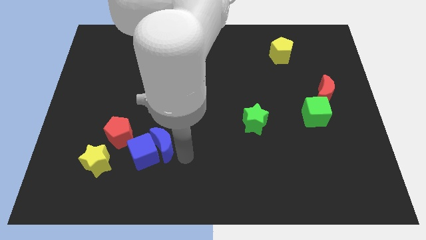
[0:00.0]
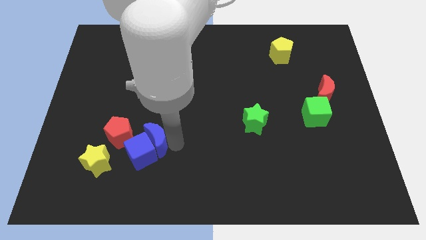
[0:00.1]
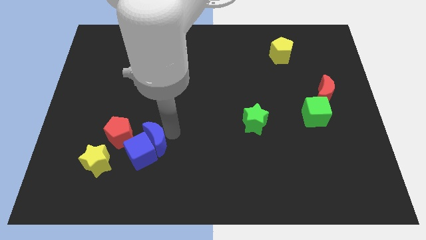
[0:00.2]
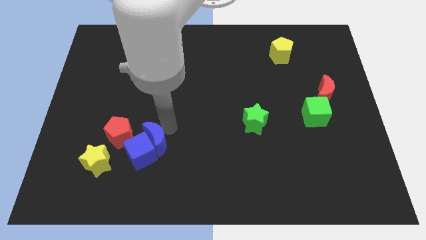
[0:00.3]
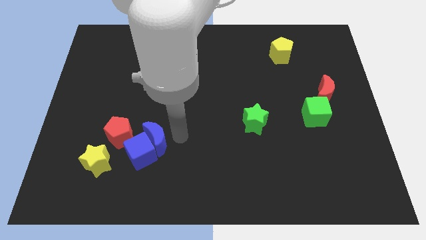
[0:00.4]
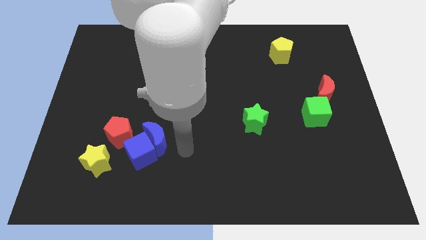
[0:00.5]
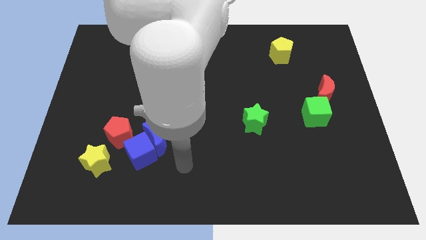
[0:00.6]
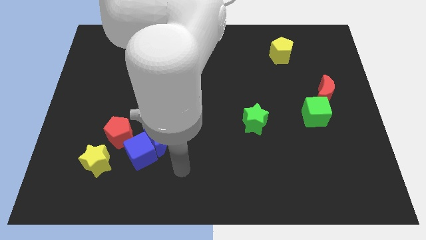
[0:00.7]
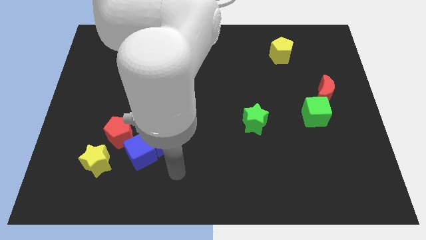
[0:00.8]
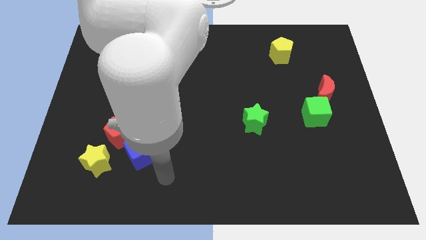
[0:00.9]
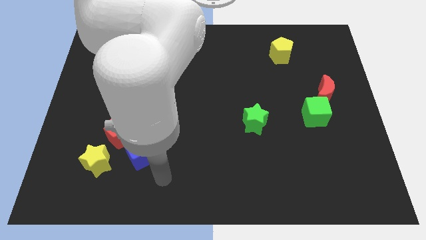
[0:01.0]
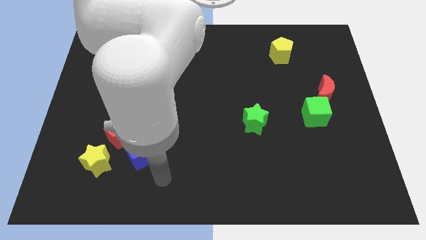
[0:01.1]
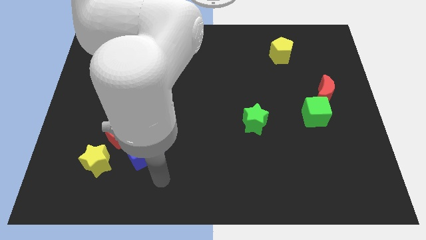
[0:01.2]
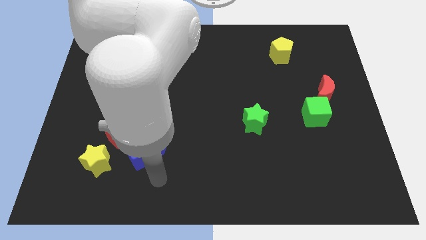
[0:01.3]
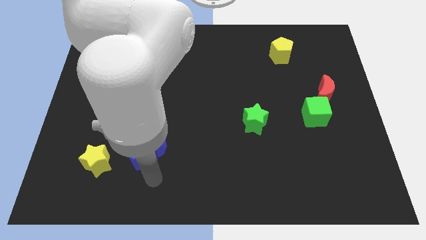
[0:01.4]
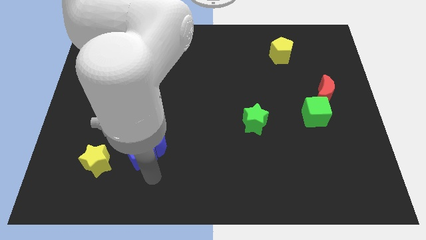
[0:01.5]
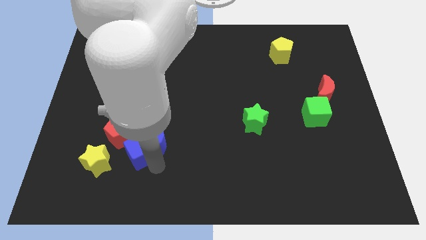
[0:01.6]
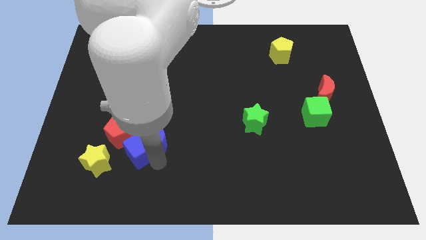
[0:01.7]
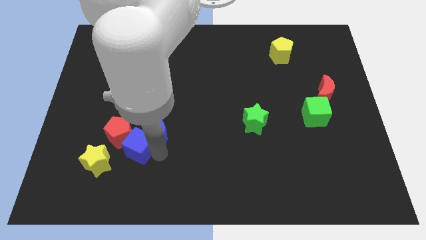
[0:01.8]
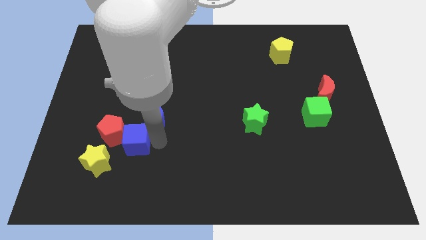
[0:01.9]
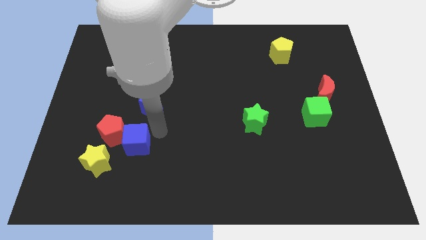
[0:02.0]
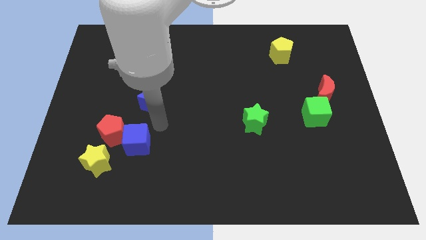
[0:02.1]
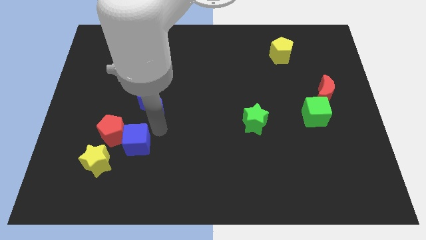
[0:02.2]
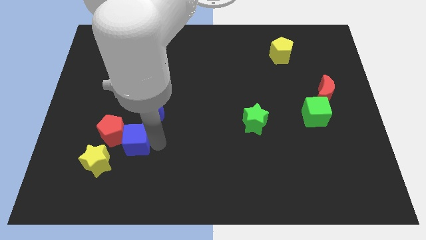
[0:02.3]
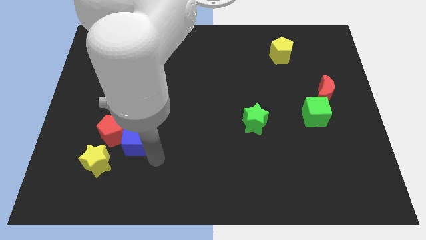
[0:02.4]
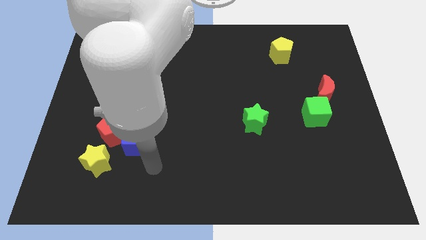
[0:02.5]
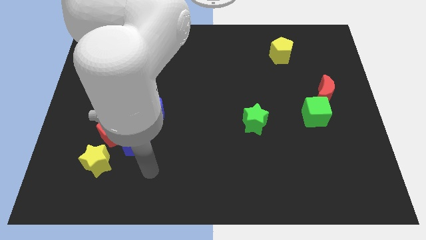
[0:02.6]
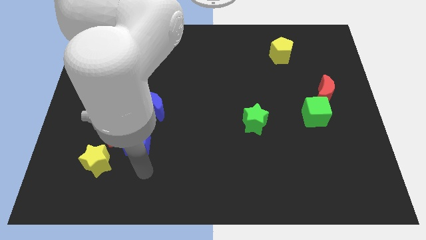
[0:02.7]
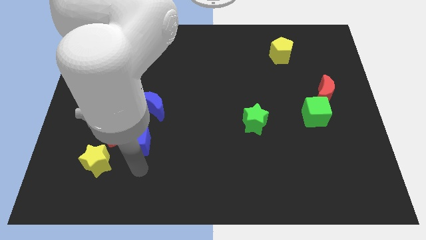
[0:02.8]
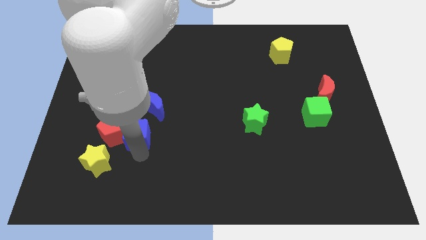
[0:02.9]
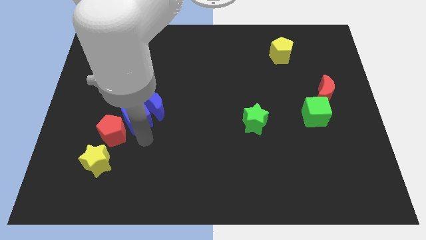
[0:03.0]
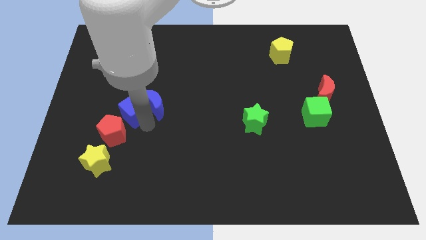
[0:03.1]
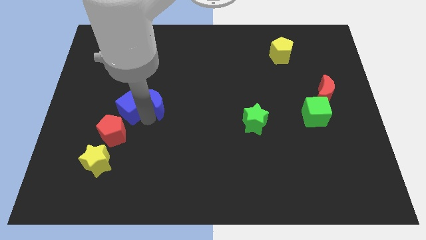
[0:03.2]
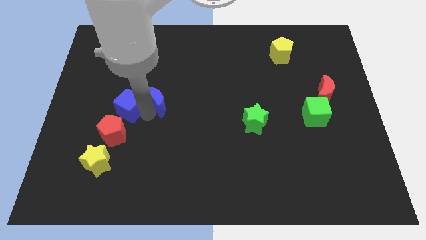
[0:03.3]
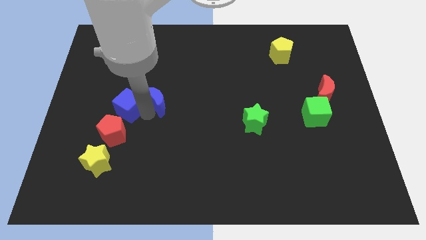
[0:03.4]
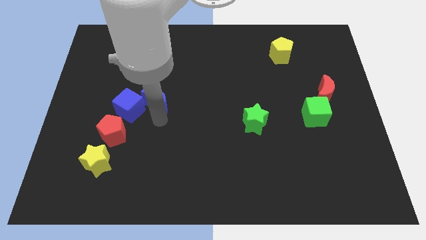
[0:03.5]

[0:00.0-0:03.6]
move the blue cube diagonal to the red pentagon

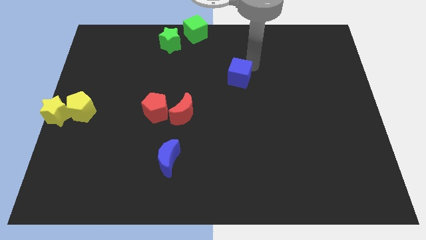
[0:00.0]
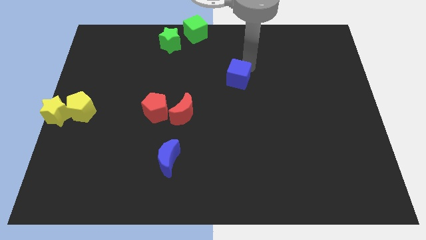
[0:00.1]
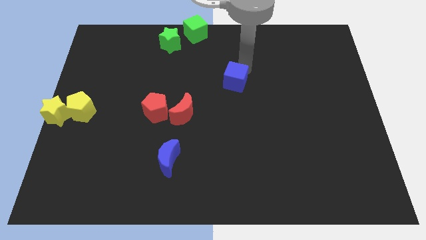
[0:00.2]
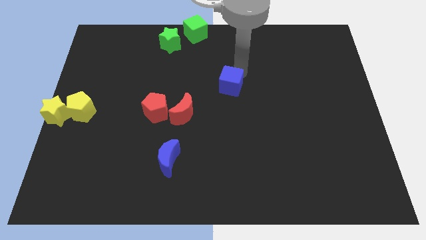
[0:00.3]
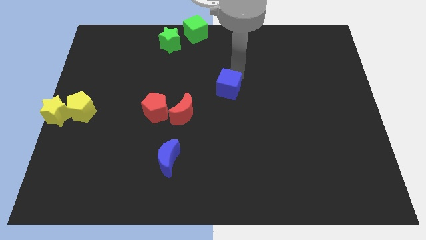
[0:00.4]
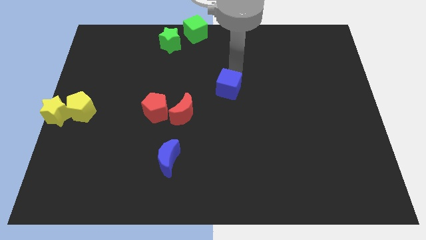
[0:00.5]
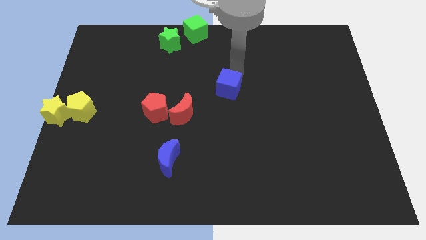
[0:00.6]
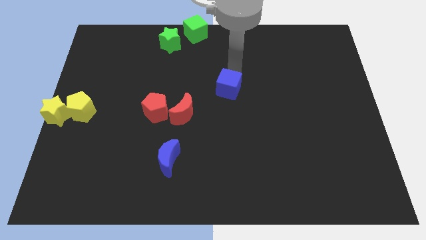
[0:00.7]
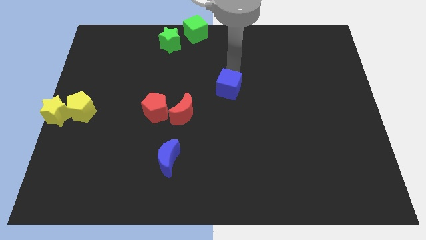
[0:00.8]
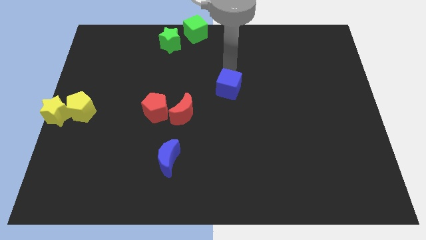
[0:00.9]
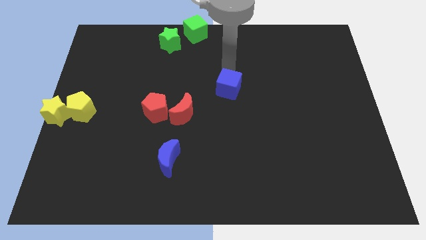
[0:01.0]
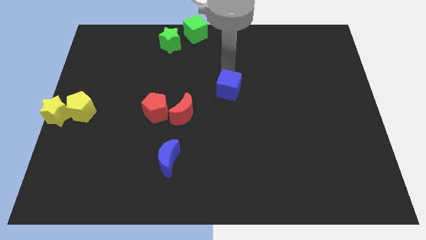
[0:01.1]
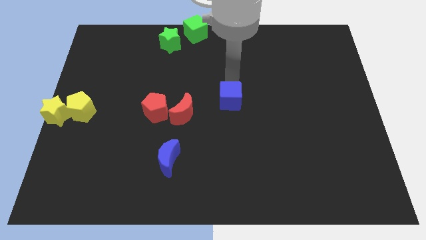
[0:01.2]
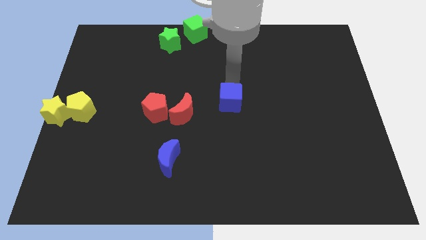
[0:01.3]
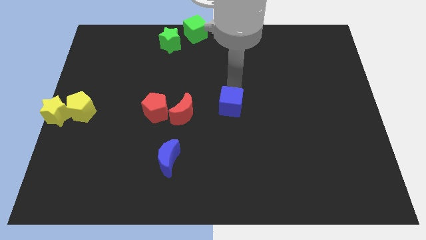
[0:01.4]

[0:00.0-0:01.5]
drag the blue cube diagonal to the green star

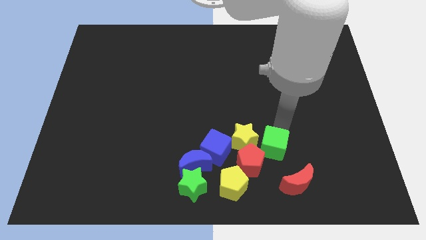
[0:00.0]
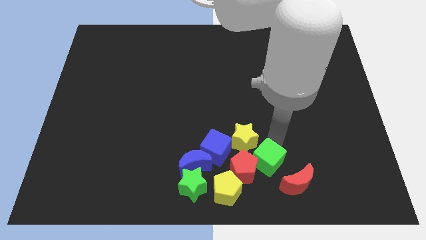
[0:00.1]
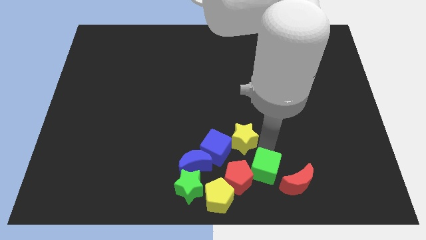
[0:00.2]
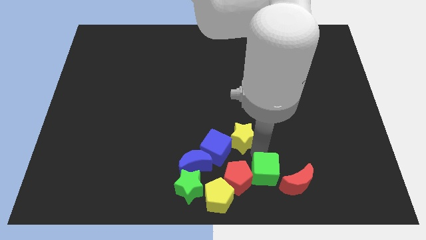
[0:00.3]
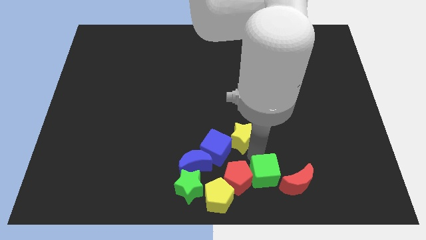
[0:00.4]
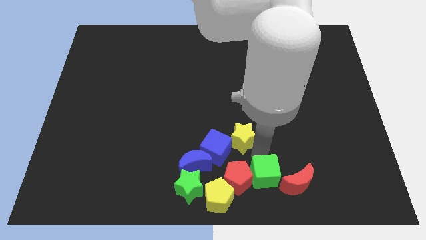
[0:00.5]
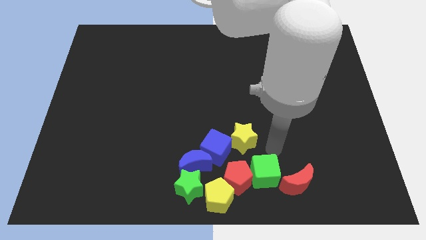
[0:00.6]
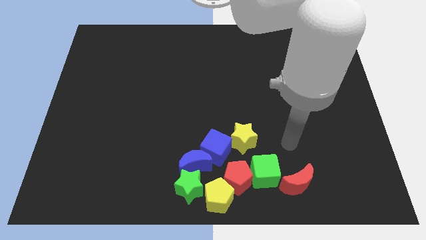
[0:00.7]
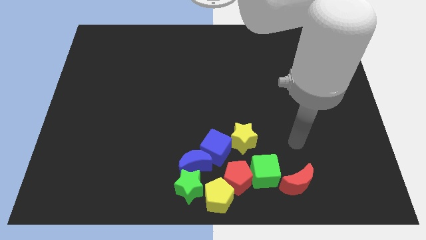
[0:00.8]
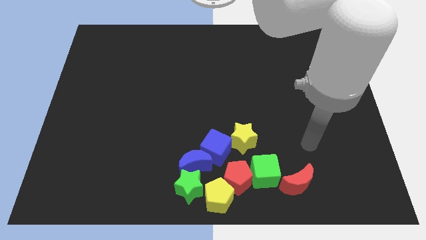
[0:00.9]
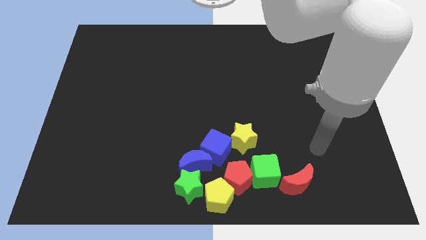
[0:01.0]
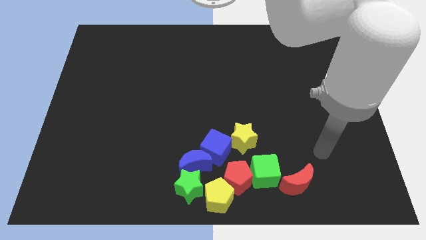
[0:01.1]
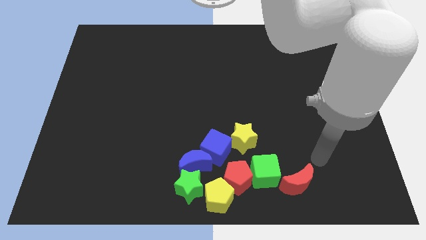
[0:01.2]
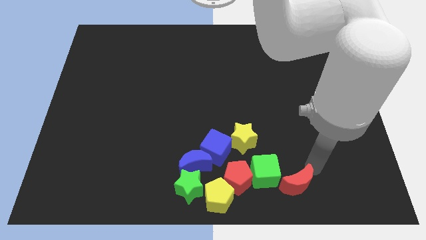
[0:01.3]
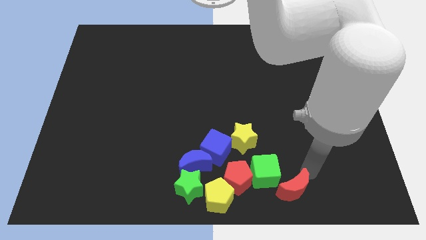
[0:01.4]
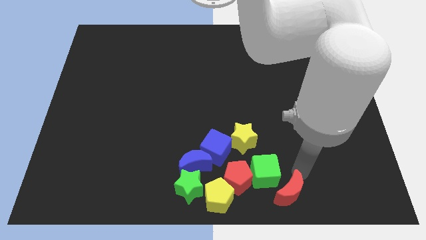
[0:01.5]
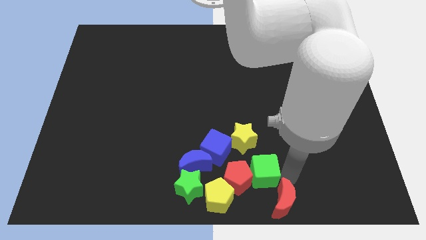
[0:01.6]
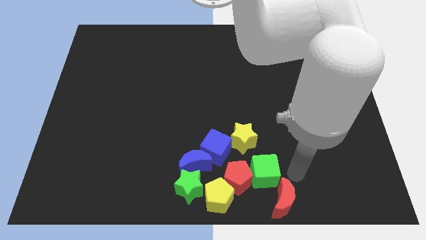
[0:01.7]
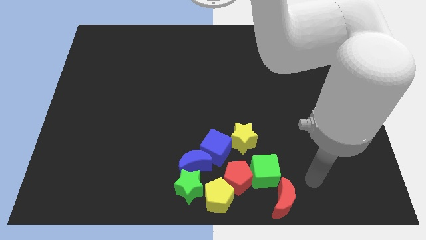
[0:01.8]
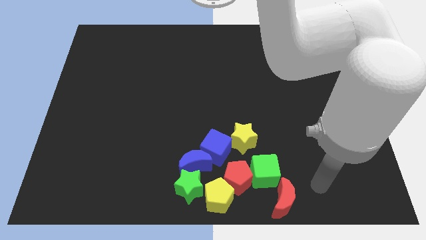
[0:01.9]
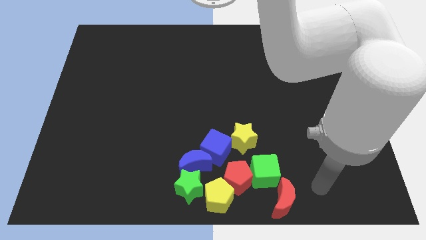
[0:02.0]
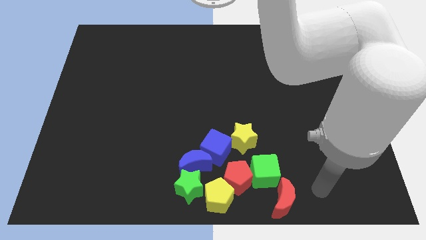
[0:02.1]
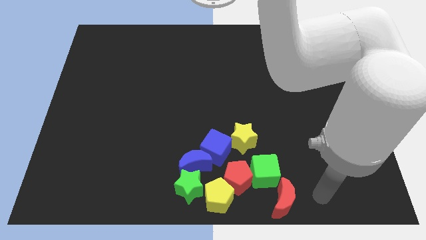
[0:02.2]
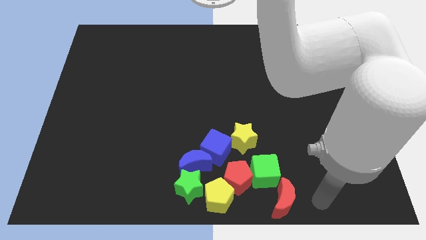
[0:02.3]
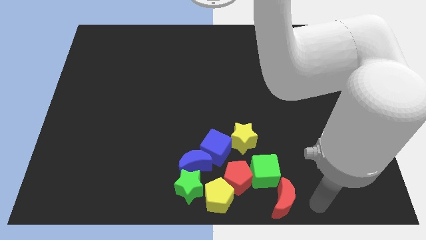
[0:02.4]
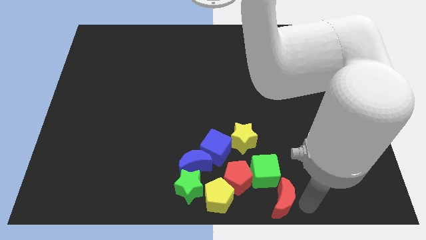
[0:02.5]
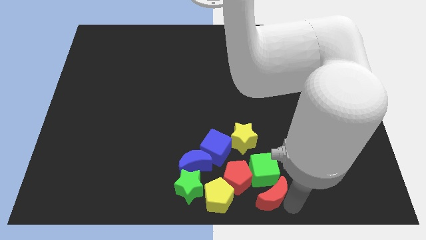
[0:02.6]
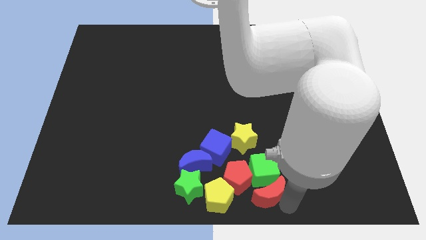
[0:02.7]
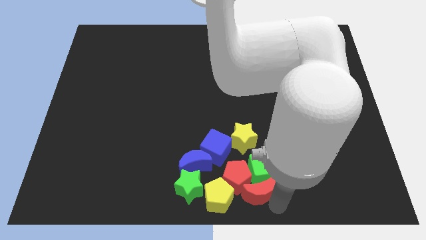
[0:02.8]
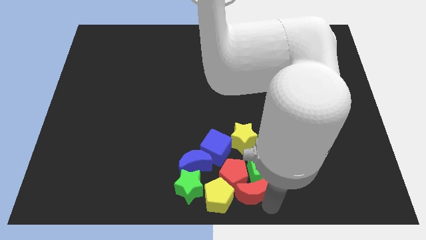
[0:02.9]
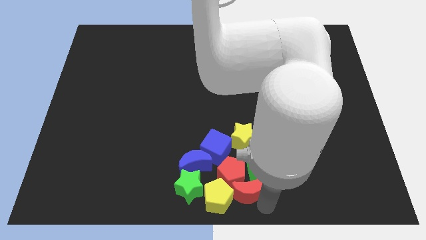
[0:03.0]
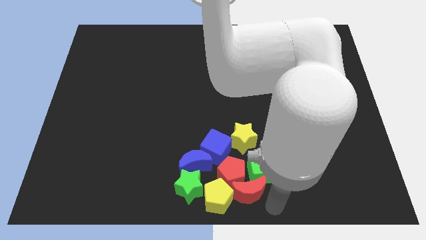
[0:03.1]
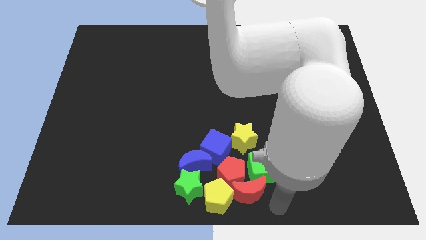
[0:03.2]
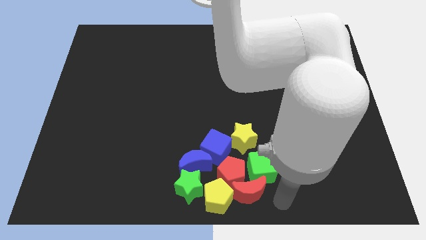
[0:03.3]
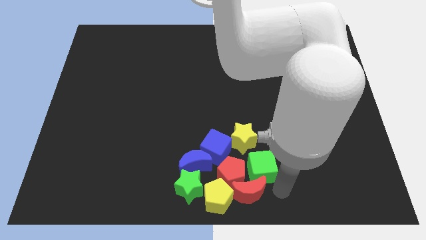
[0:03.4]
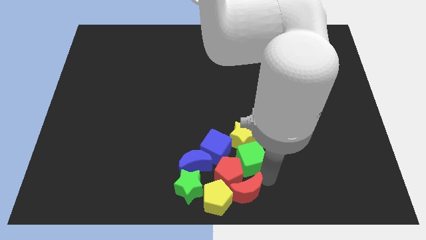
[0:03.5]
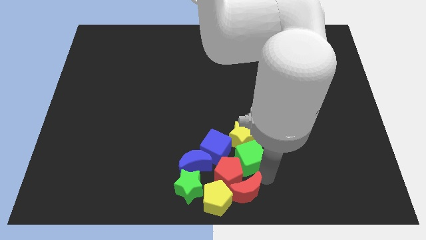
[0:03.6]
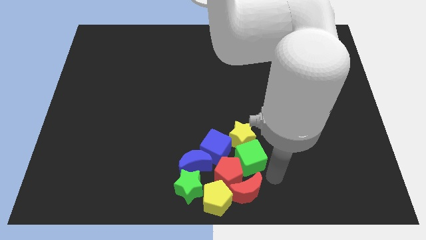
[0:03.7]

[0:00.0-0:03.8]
place the red crescent to the bottom of red pentagon

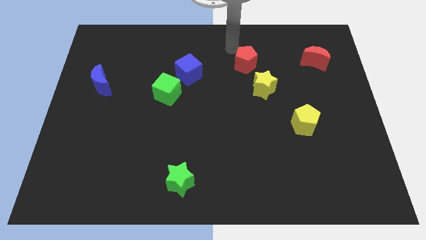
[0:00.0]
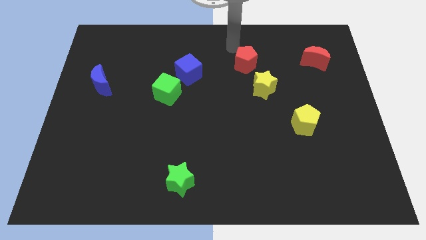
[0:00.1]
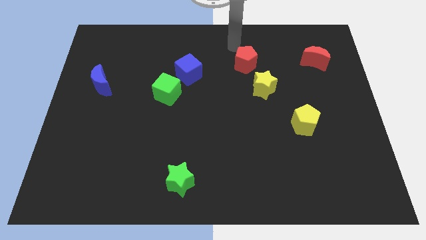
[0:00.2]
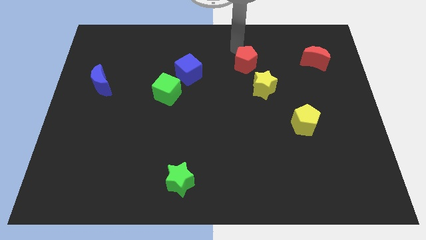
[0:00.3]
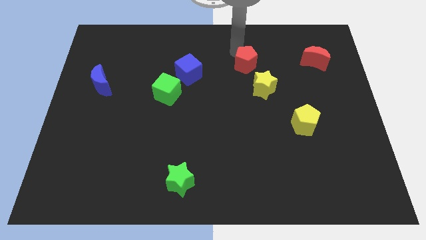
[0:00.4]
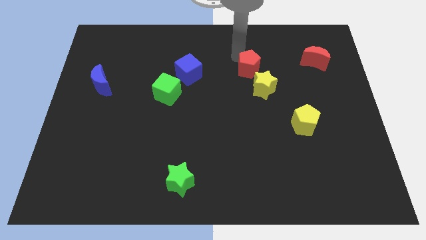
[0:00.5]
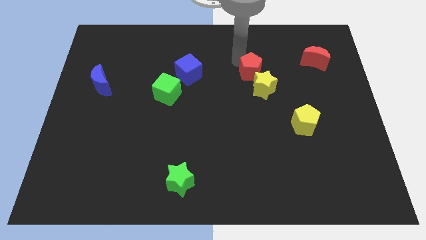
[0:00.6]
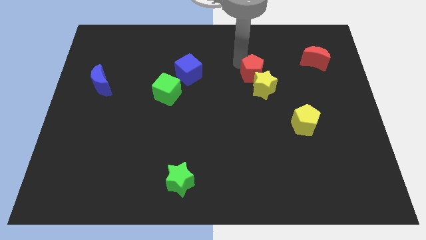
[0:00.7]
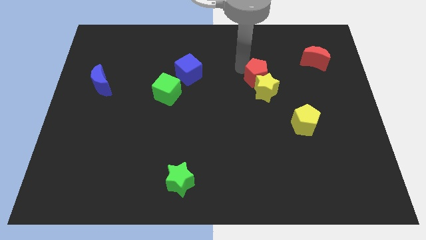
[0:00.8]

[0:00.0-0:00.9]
push the red pentagon into the yellow star
